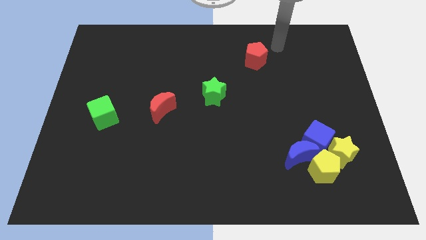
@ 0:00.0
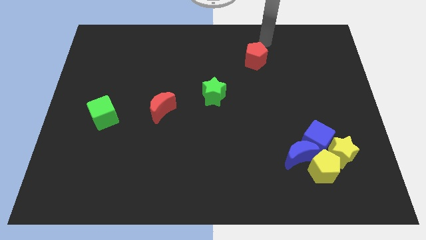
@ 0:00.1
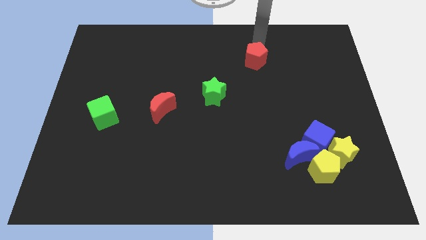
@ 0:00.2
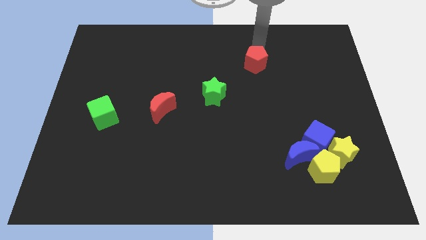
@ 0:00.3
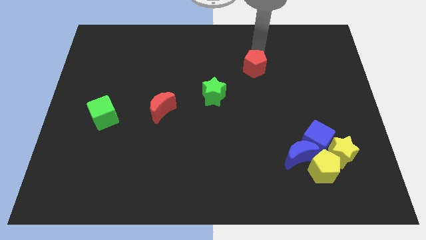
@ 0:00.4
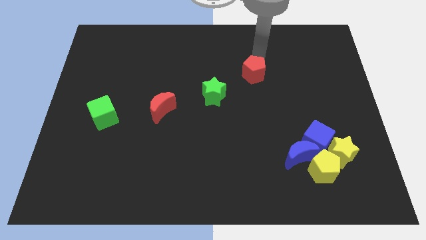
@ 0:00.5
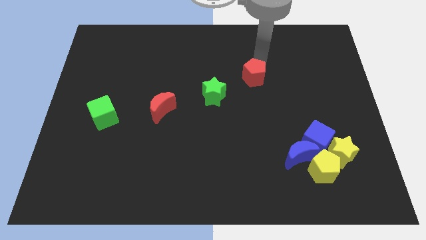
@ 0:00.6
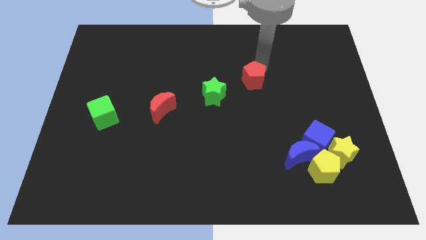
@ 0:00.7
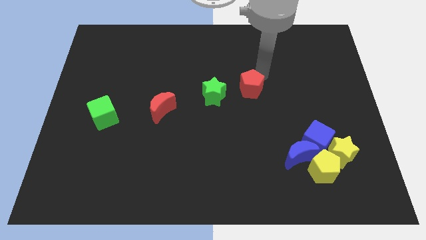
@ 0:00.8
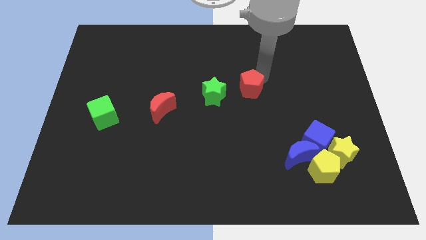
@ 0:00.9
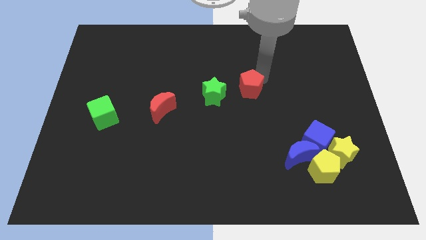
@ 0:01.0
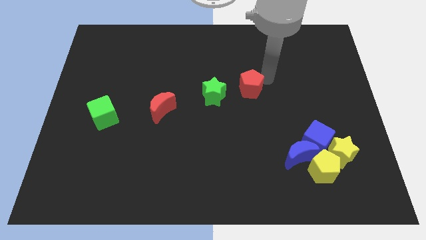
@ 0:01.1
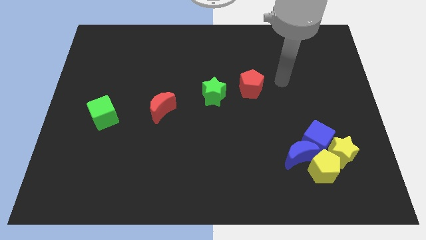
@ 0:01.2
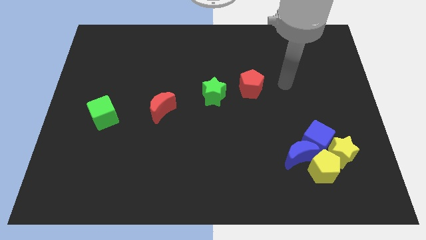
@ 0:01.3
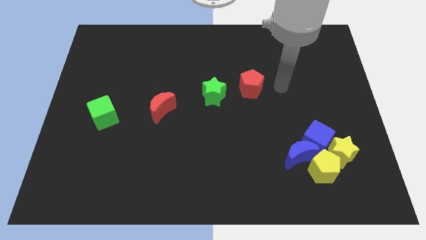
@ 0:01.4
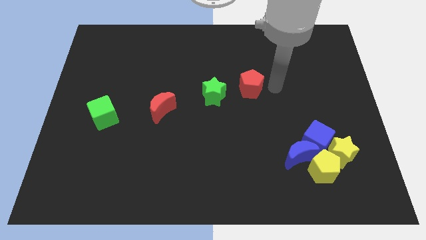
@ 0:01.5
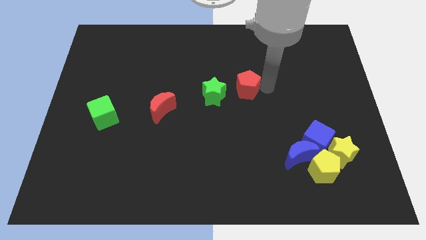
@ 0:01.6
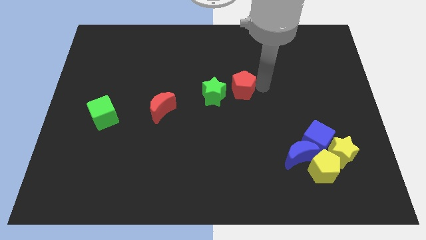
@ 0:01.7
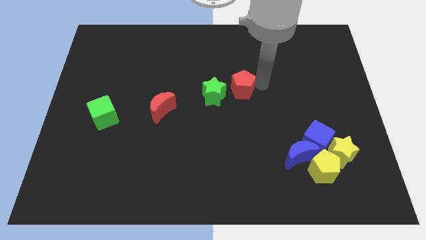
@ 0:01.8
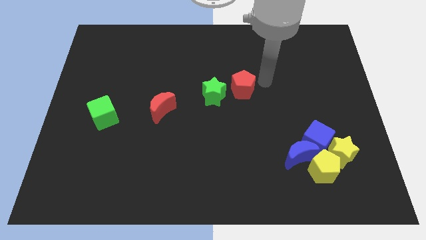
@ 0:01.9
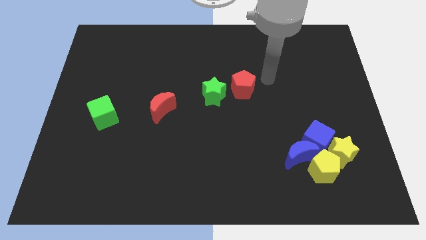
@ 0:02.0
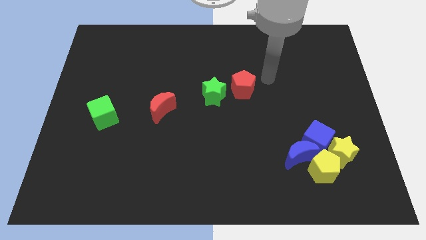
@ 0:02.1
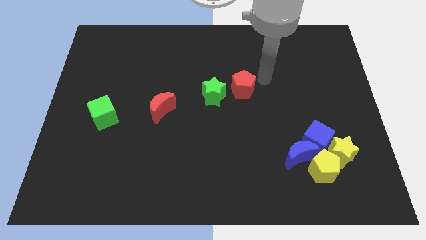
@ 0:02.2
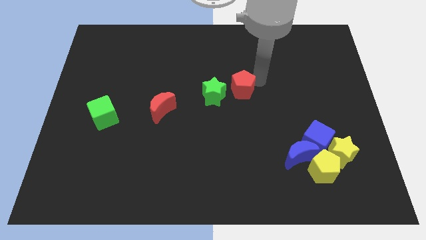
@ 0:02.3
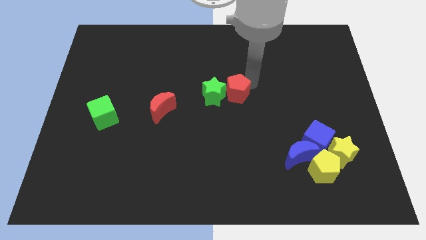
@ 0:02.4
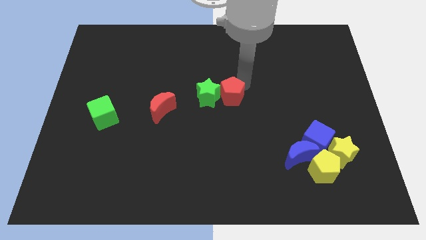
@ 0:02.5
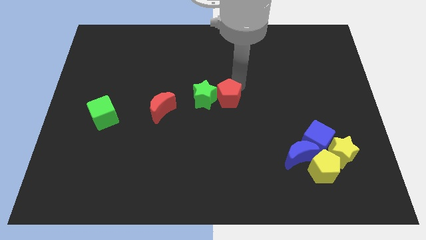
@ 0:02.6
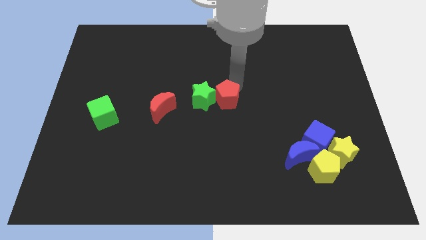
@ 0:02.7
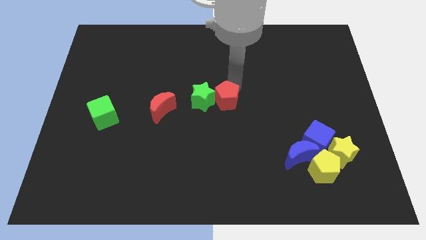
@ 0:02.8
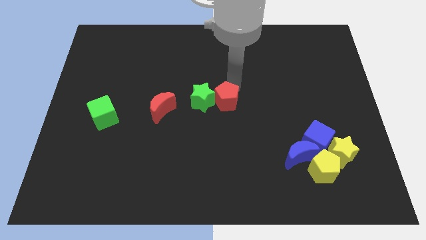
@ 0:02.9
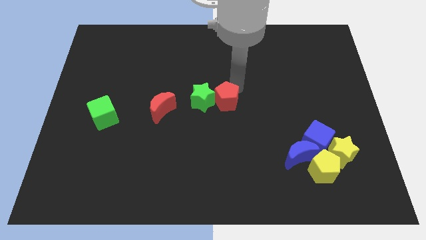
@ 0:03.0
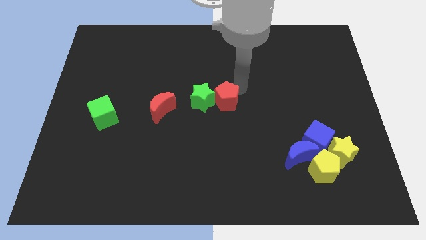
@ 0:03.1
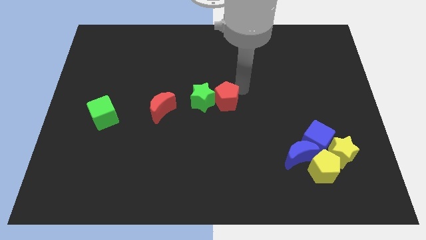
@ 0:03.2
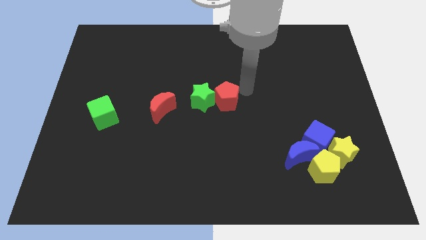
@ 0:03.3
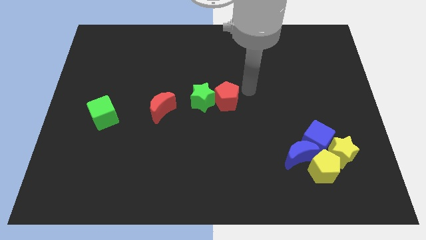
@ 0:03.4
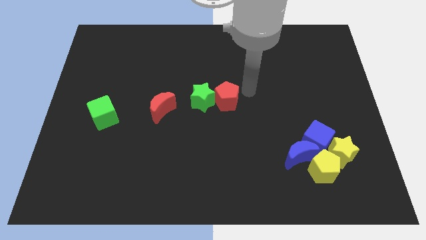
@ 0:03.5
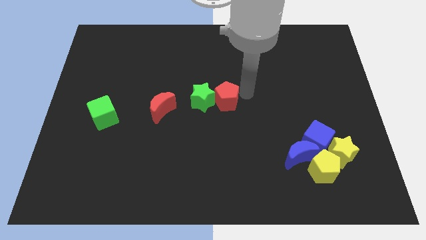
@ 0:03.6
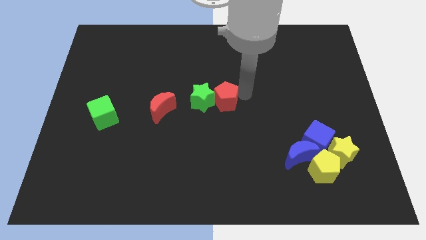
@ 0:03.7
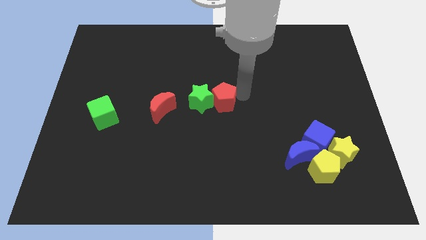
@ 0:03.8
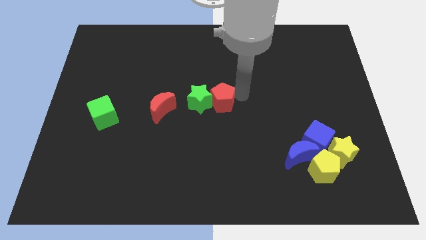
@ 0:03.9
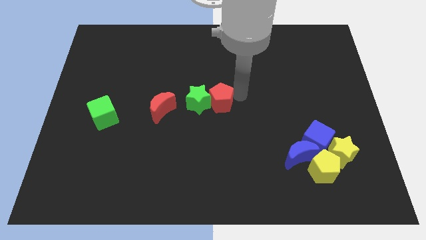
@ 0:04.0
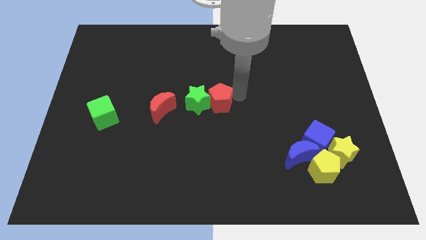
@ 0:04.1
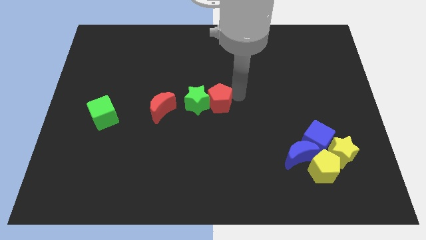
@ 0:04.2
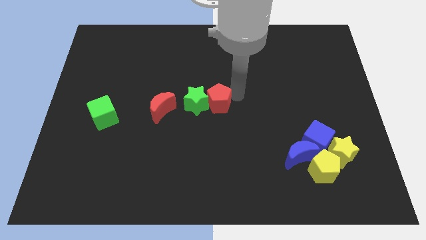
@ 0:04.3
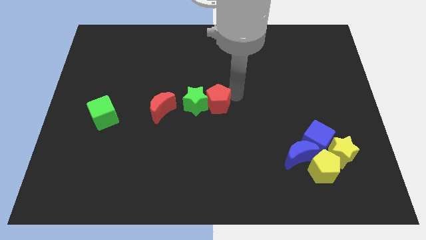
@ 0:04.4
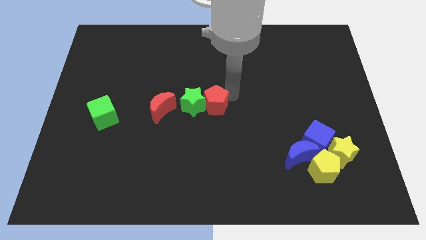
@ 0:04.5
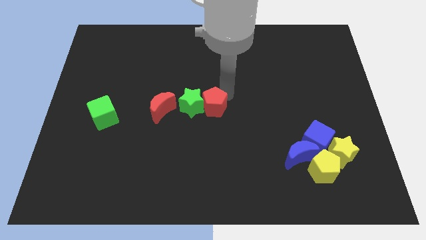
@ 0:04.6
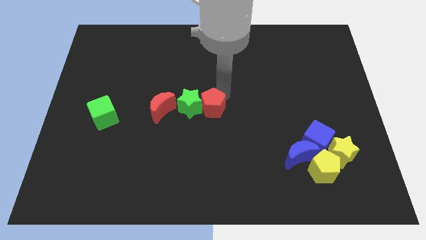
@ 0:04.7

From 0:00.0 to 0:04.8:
push the red pentagon into the right of green star

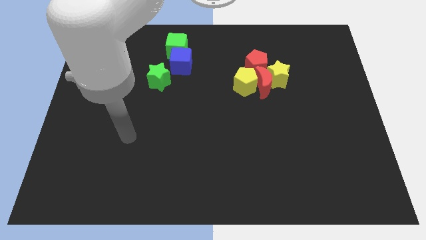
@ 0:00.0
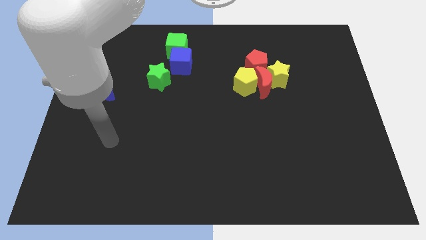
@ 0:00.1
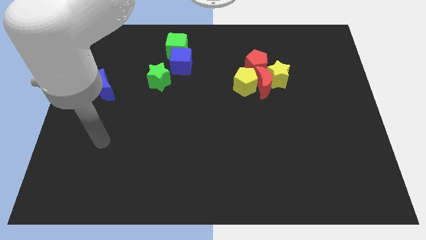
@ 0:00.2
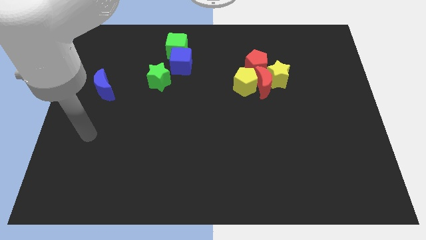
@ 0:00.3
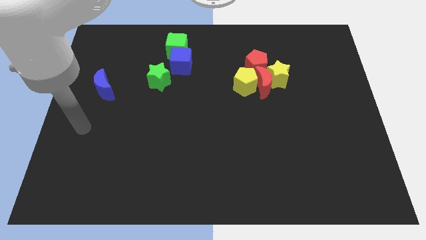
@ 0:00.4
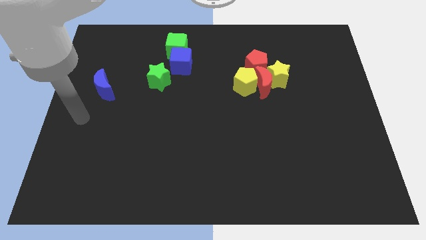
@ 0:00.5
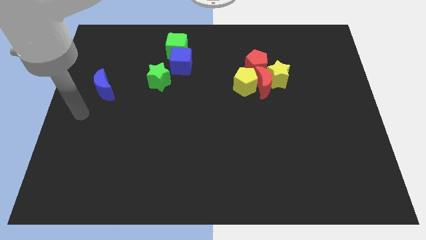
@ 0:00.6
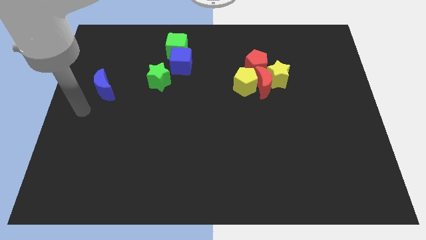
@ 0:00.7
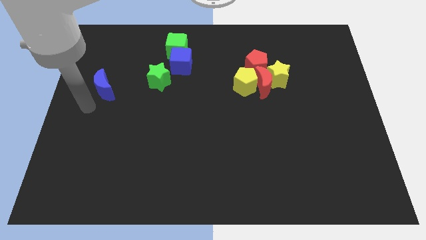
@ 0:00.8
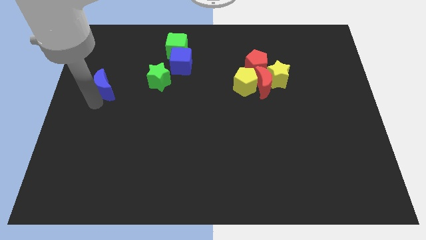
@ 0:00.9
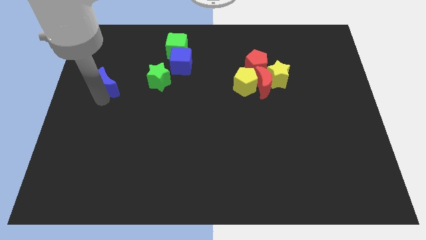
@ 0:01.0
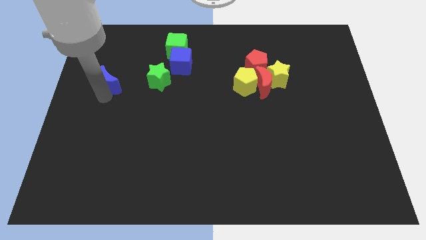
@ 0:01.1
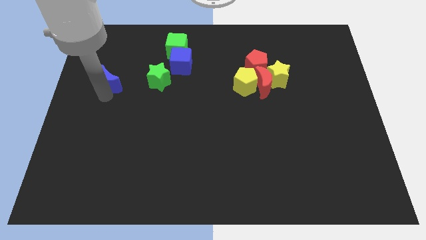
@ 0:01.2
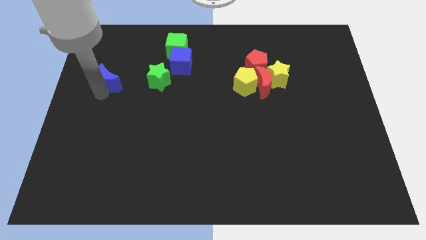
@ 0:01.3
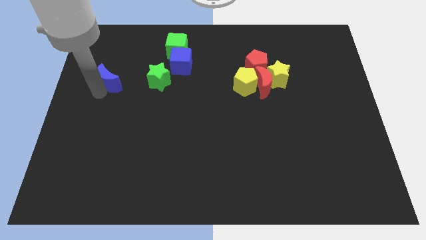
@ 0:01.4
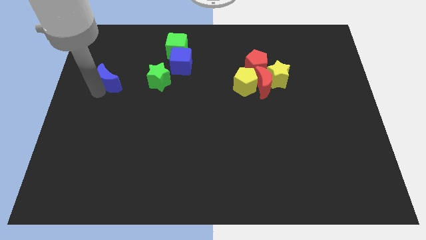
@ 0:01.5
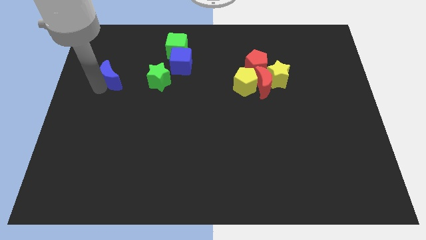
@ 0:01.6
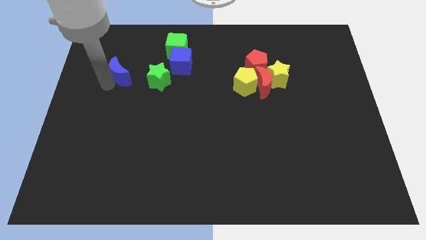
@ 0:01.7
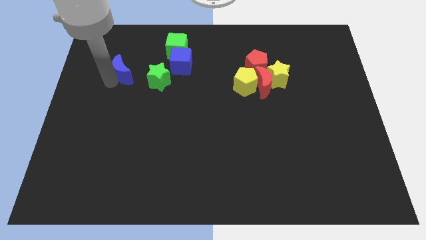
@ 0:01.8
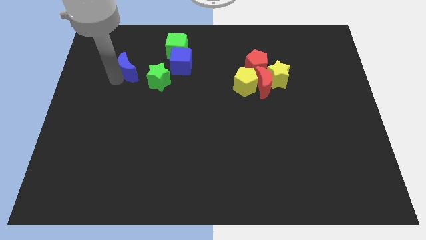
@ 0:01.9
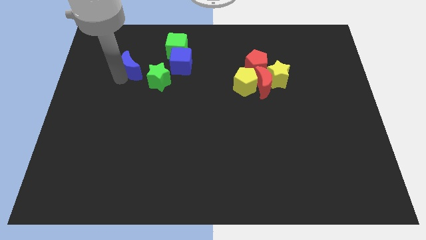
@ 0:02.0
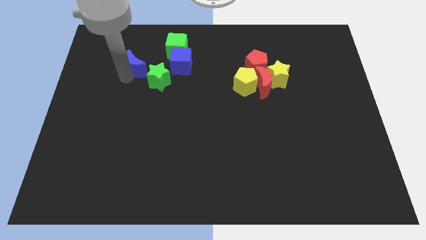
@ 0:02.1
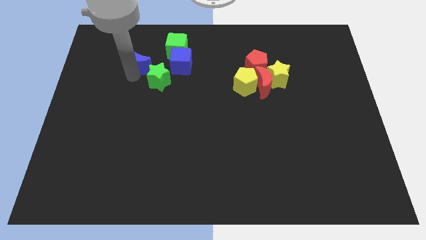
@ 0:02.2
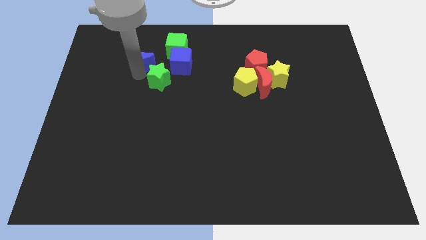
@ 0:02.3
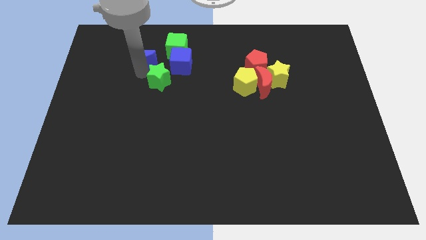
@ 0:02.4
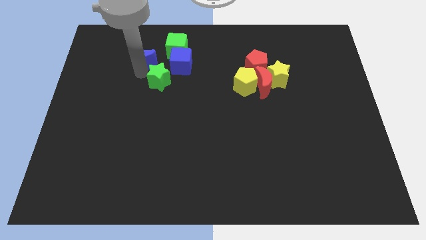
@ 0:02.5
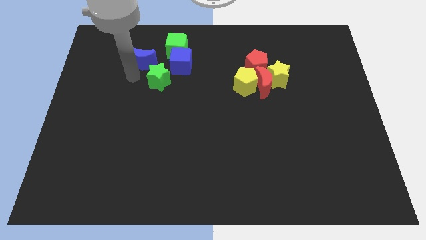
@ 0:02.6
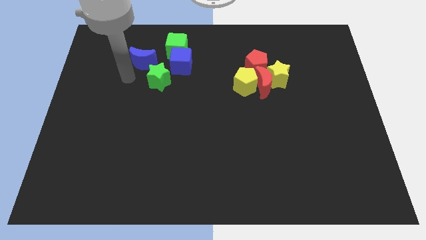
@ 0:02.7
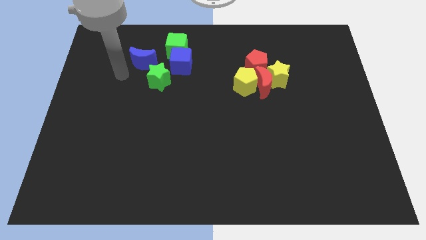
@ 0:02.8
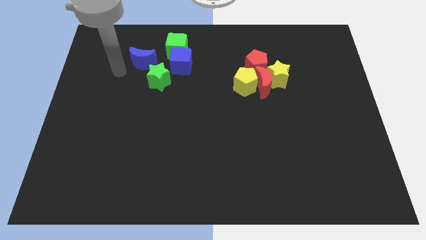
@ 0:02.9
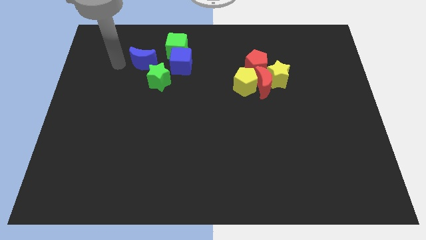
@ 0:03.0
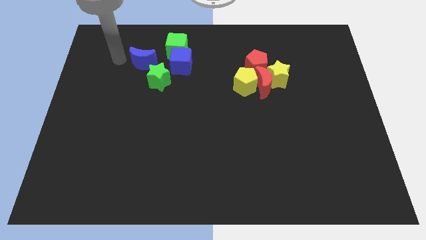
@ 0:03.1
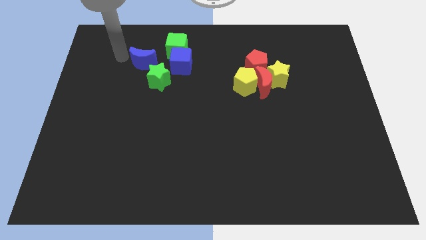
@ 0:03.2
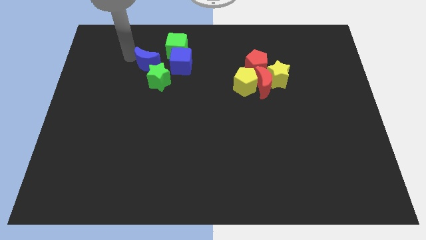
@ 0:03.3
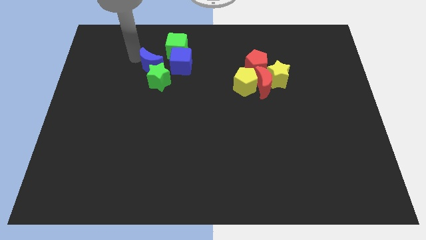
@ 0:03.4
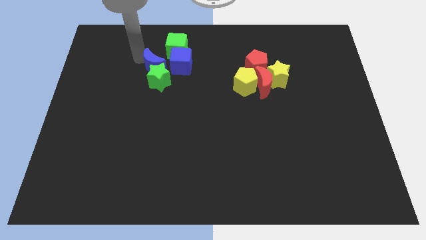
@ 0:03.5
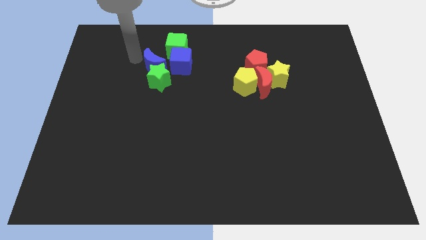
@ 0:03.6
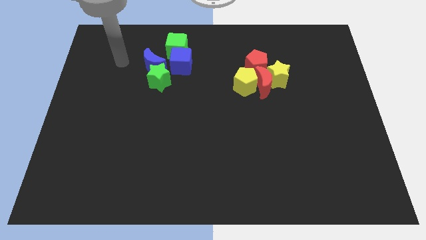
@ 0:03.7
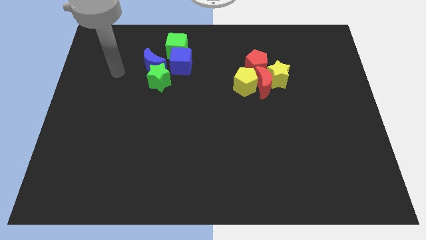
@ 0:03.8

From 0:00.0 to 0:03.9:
place the blue moon above the green star
